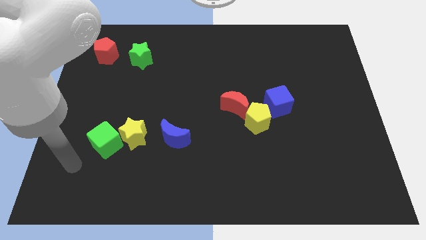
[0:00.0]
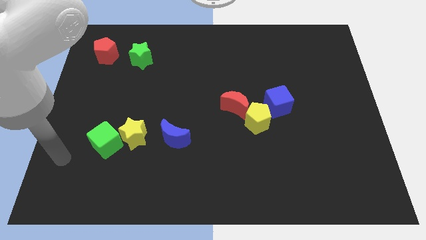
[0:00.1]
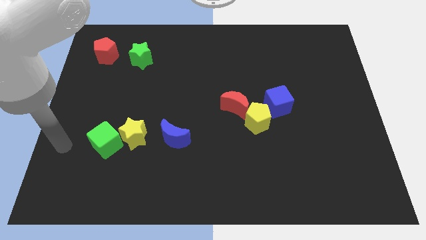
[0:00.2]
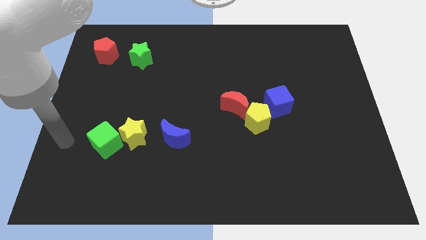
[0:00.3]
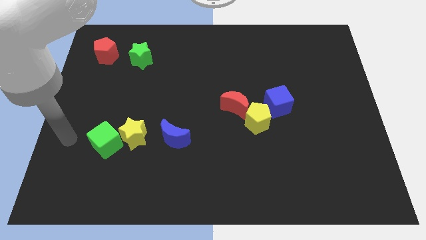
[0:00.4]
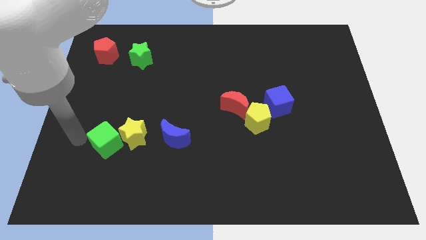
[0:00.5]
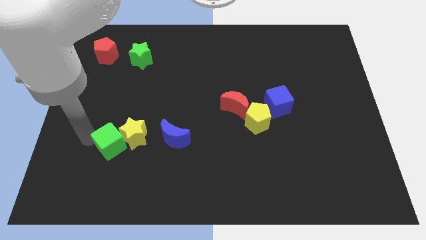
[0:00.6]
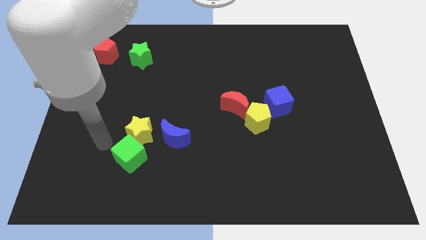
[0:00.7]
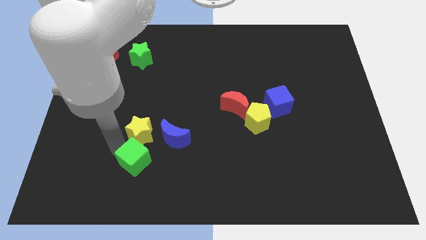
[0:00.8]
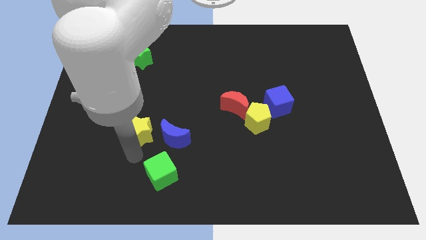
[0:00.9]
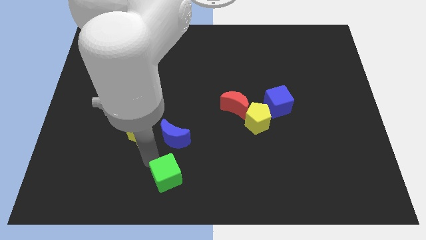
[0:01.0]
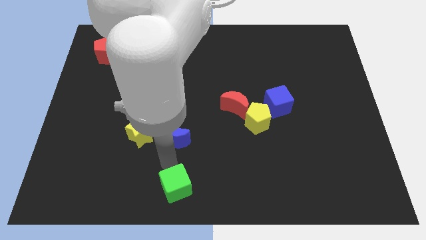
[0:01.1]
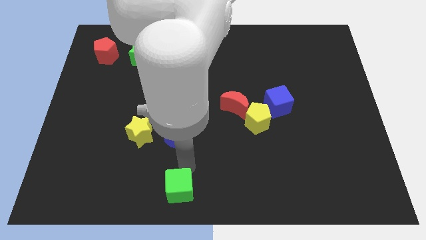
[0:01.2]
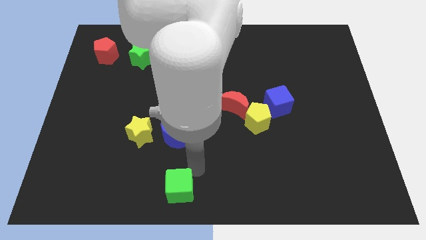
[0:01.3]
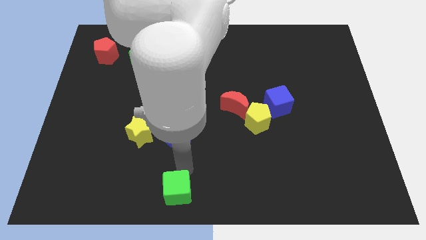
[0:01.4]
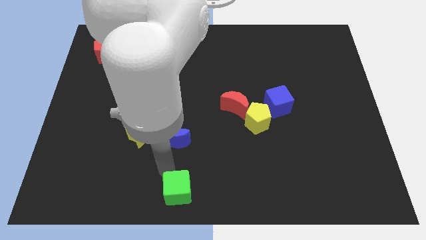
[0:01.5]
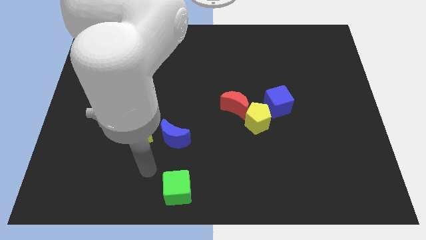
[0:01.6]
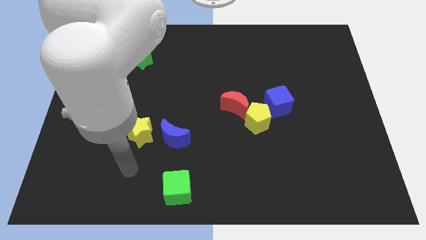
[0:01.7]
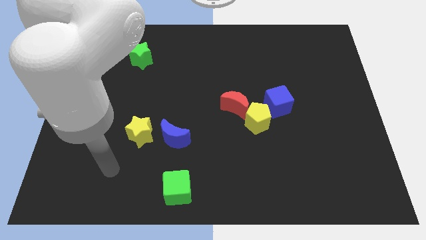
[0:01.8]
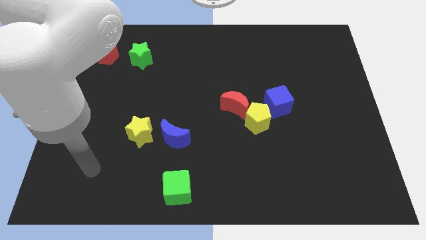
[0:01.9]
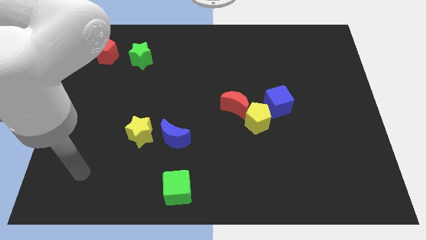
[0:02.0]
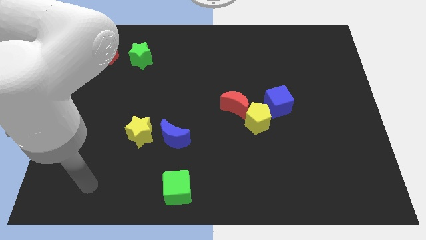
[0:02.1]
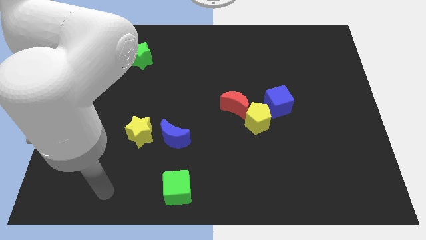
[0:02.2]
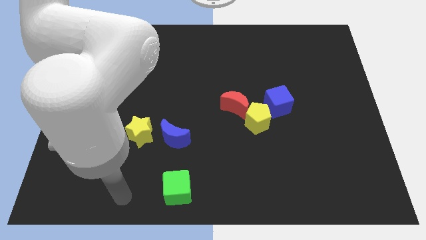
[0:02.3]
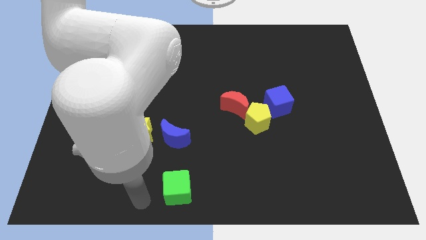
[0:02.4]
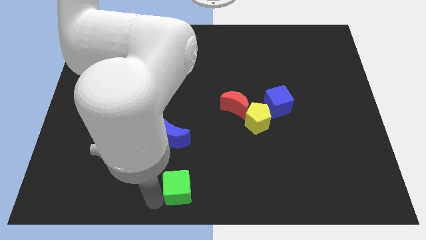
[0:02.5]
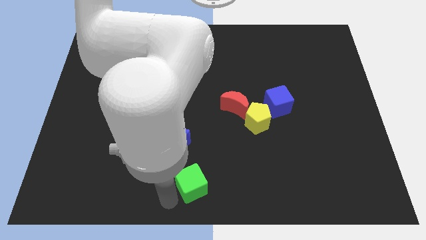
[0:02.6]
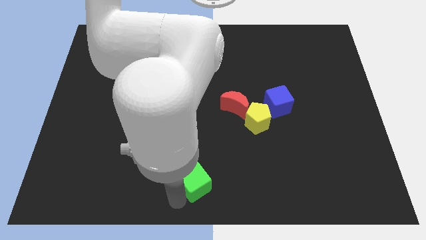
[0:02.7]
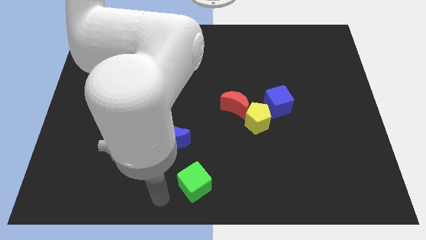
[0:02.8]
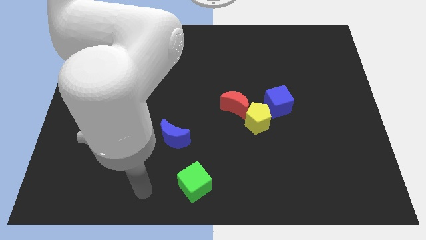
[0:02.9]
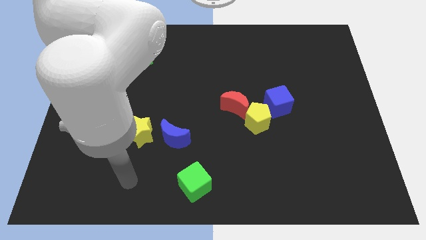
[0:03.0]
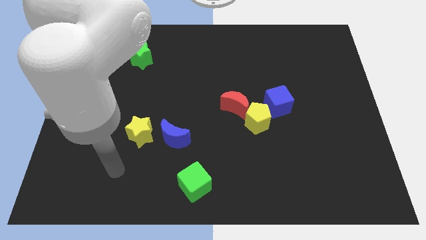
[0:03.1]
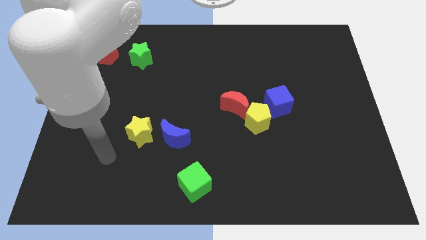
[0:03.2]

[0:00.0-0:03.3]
push green cube to bottom center of the board

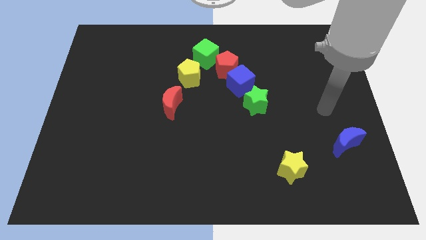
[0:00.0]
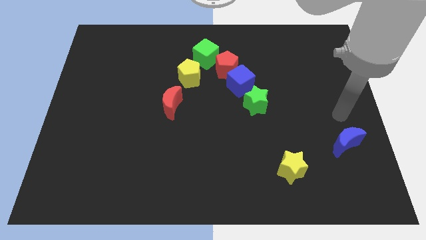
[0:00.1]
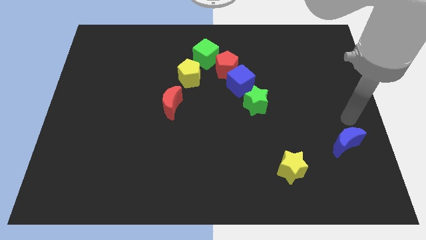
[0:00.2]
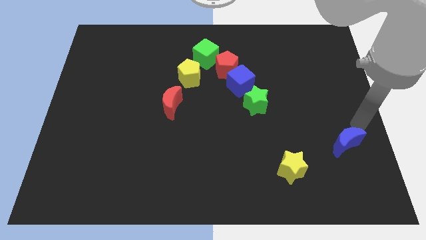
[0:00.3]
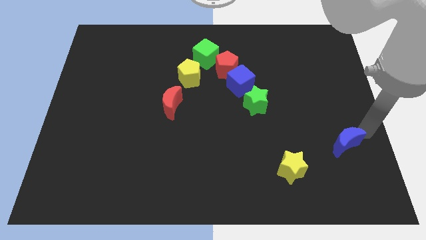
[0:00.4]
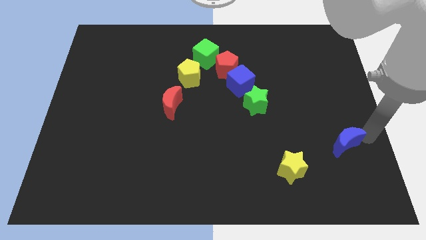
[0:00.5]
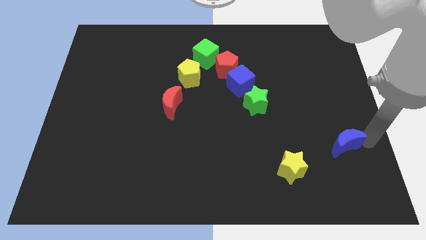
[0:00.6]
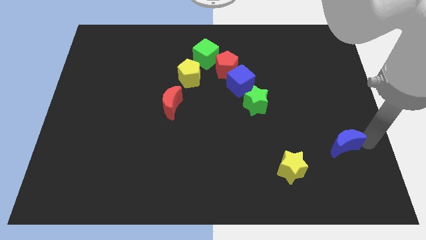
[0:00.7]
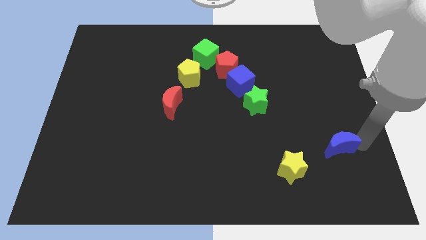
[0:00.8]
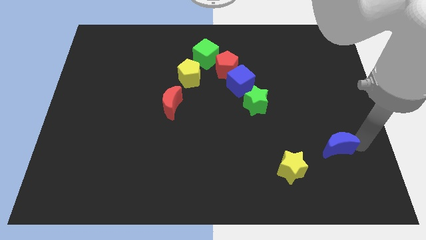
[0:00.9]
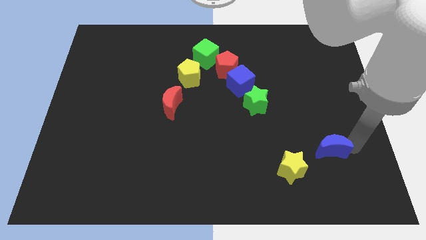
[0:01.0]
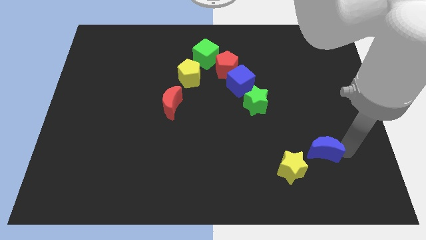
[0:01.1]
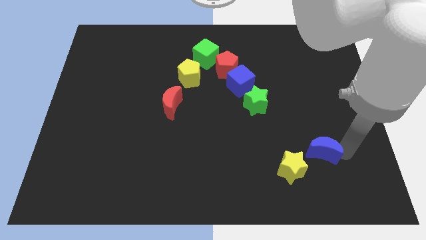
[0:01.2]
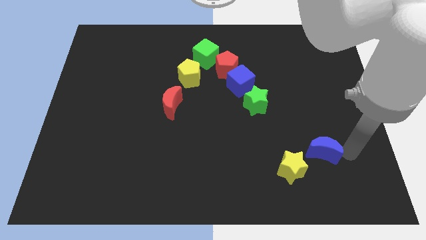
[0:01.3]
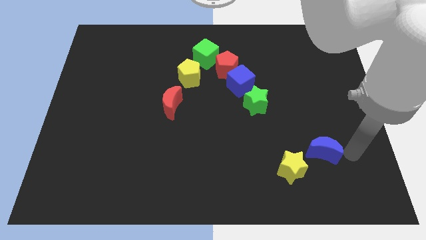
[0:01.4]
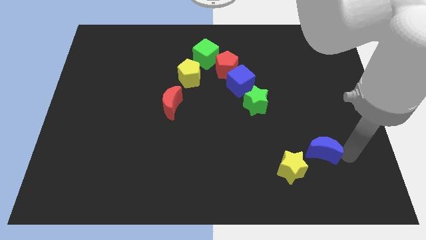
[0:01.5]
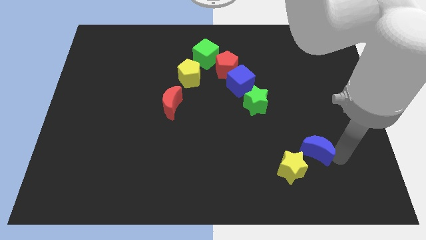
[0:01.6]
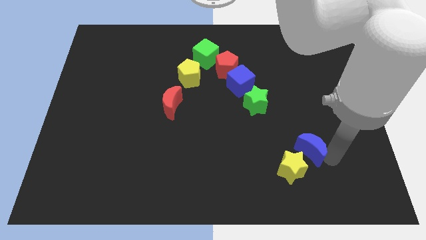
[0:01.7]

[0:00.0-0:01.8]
place the blue moon diagonal to the yellow star

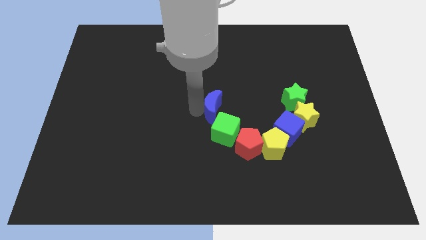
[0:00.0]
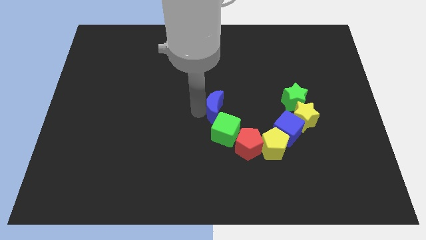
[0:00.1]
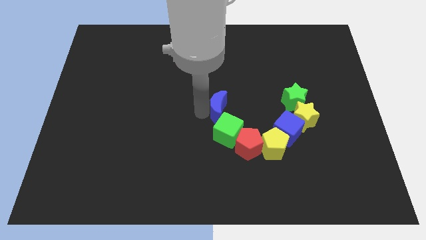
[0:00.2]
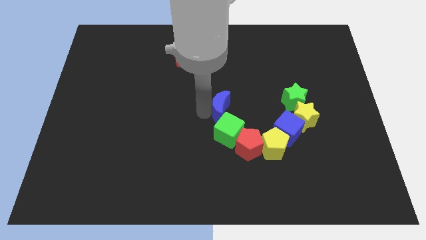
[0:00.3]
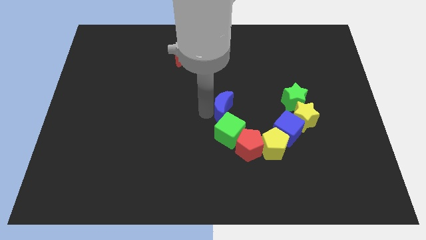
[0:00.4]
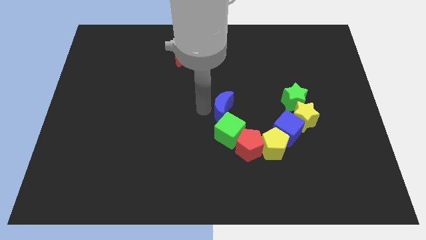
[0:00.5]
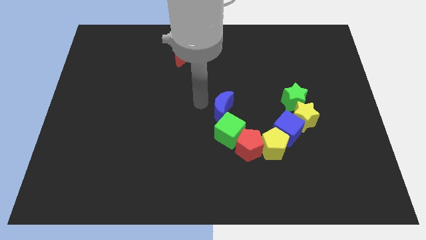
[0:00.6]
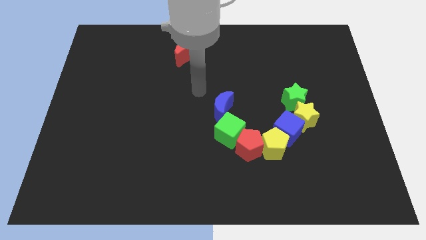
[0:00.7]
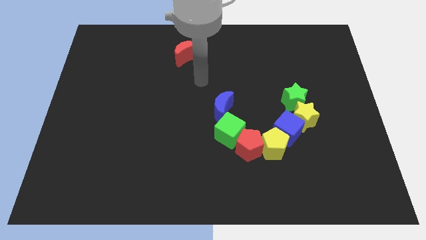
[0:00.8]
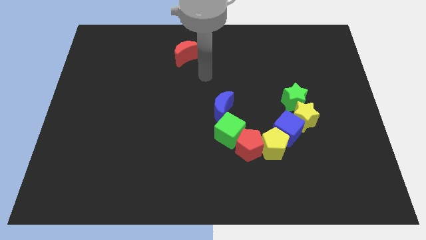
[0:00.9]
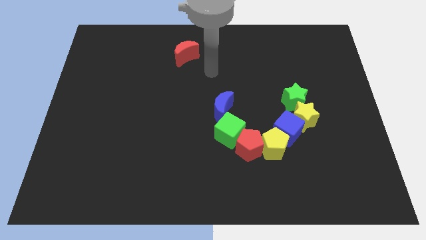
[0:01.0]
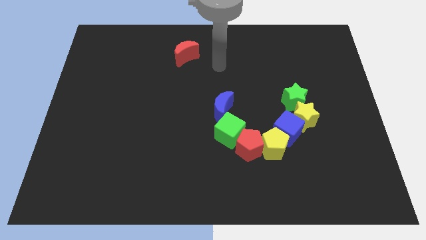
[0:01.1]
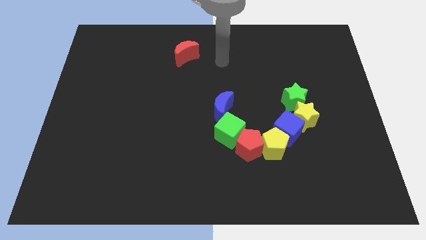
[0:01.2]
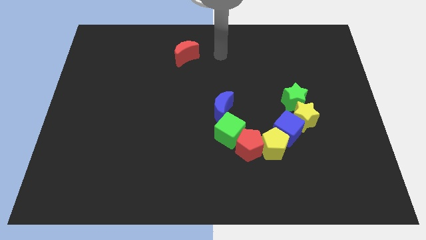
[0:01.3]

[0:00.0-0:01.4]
move your arm to the right of the red crescent

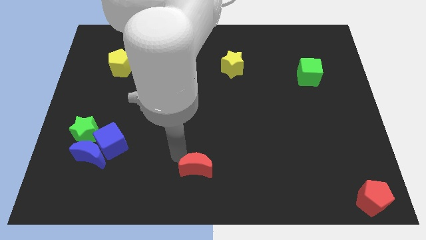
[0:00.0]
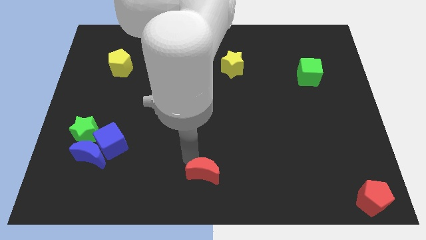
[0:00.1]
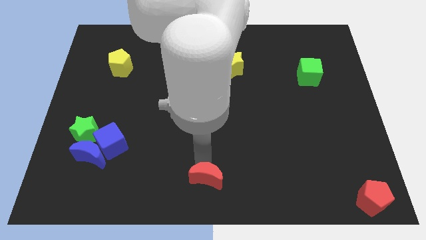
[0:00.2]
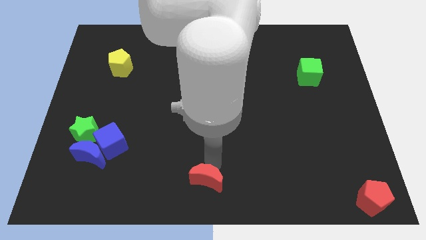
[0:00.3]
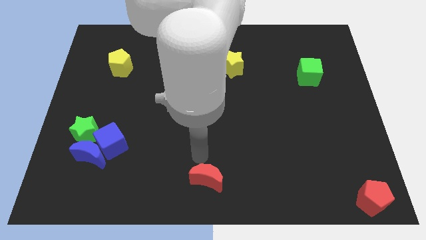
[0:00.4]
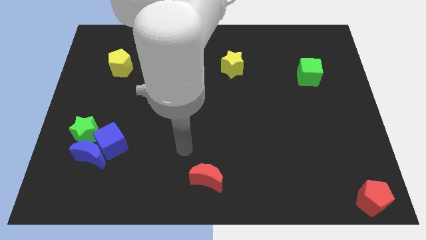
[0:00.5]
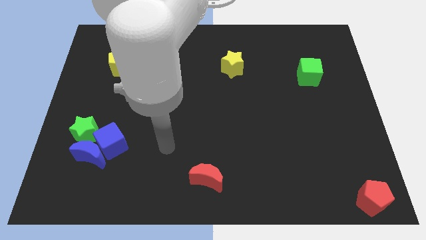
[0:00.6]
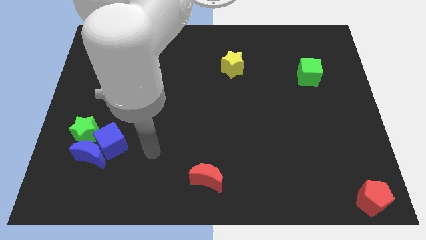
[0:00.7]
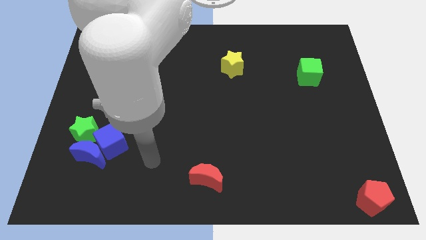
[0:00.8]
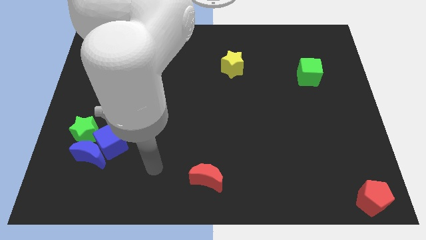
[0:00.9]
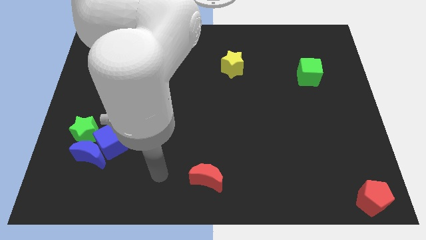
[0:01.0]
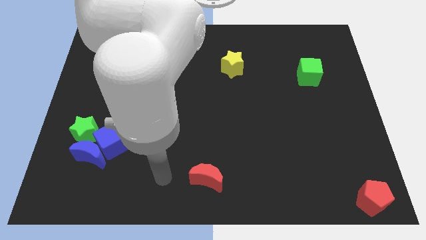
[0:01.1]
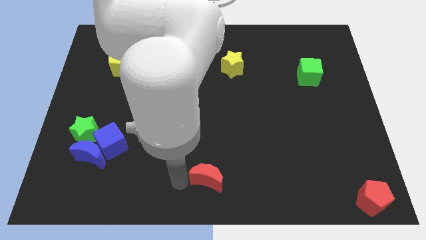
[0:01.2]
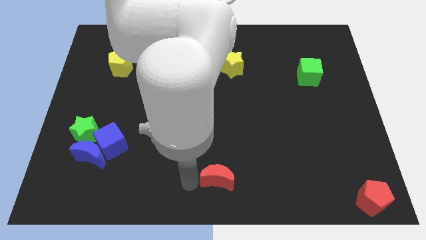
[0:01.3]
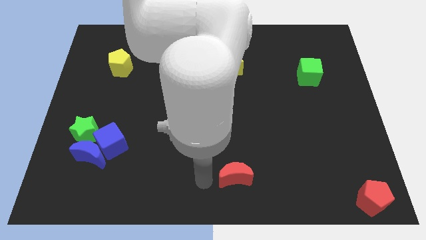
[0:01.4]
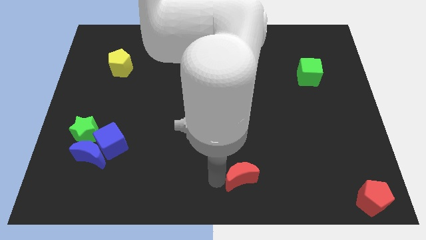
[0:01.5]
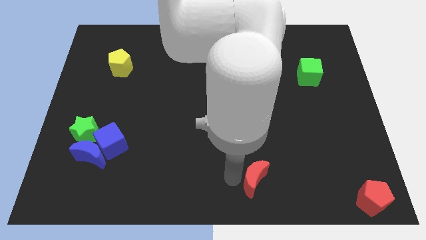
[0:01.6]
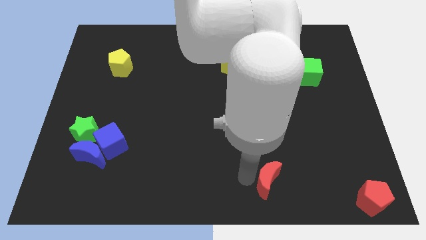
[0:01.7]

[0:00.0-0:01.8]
push the red moon towards the red pentagon

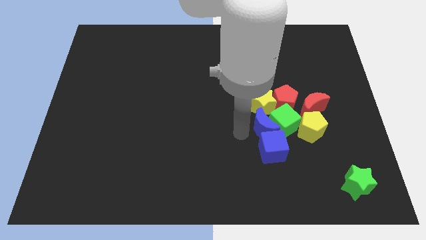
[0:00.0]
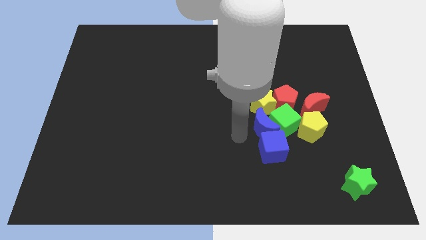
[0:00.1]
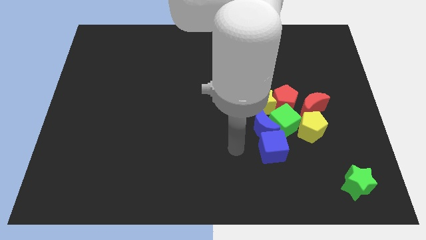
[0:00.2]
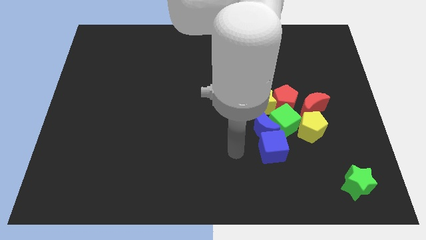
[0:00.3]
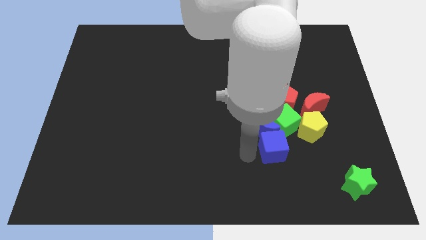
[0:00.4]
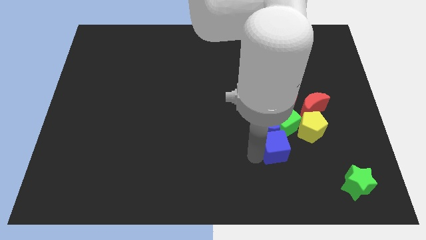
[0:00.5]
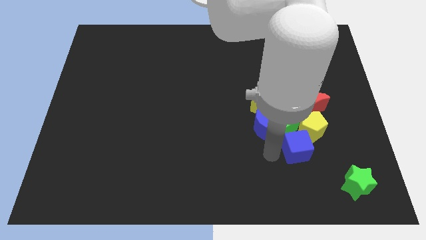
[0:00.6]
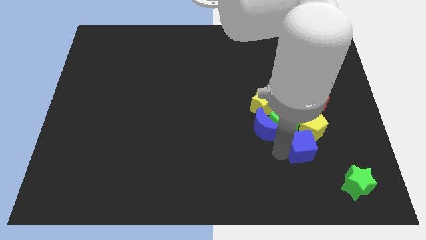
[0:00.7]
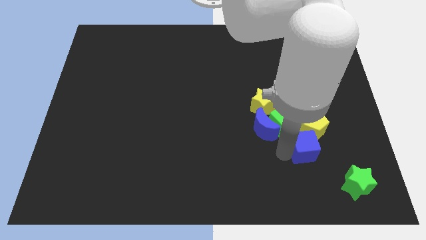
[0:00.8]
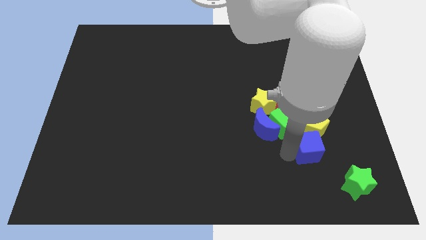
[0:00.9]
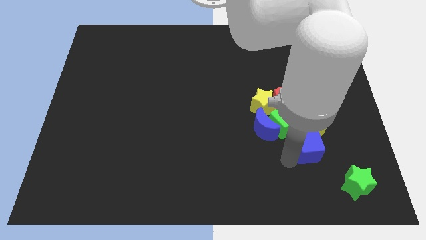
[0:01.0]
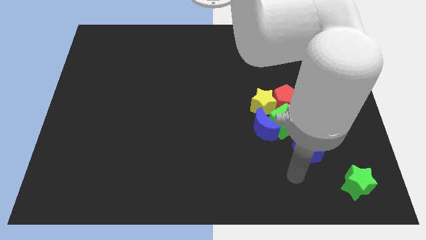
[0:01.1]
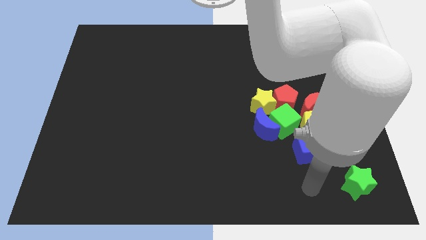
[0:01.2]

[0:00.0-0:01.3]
place the blue cube close to the yellow pentagon
